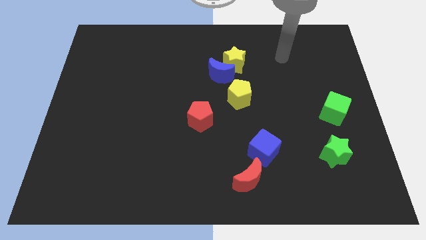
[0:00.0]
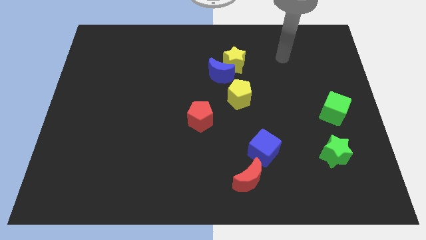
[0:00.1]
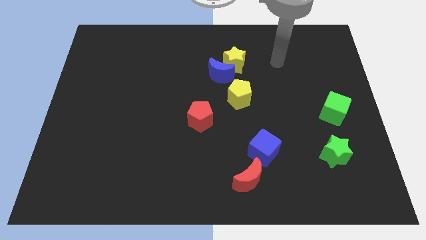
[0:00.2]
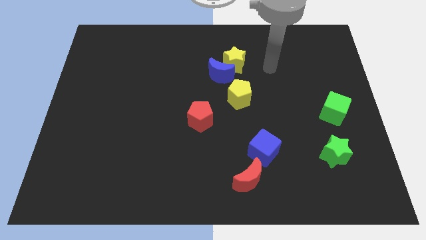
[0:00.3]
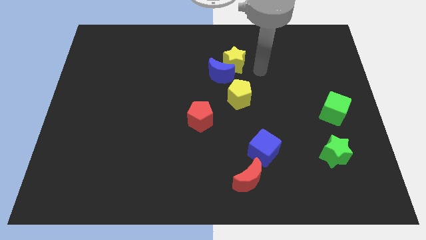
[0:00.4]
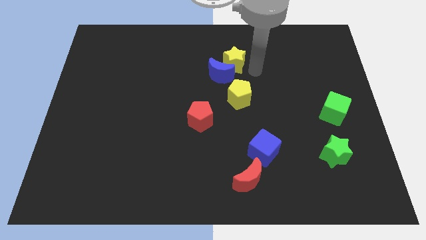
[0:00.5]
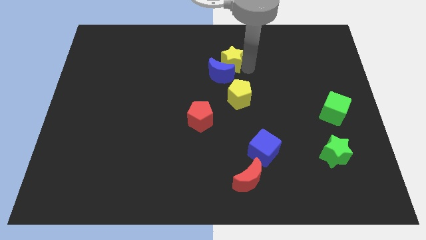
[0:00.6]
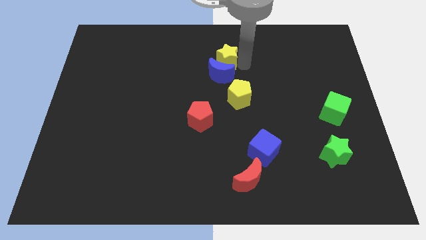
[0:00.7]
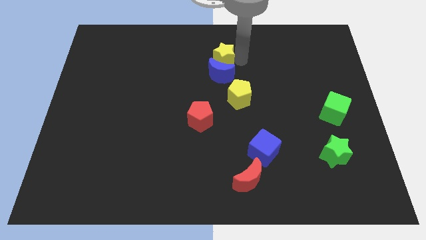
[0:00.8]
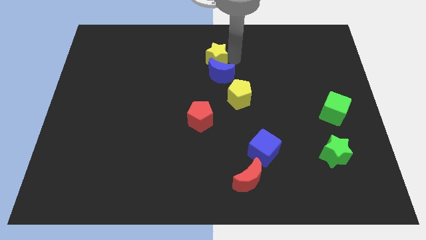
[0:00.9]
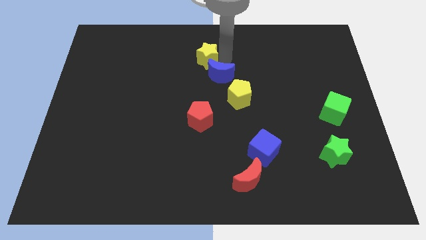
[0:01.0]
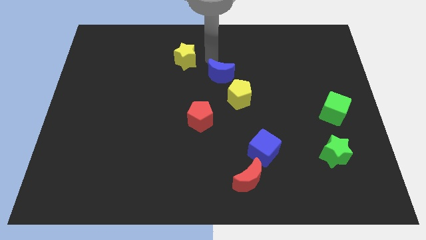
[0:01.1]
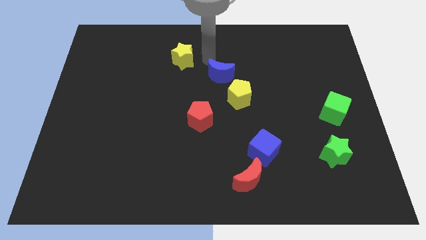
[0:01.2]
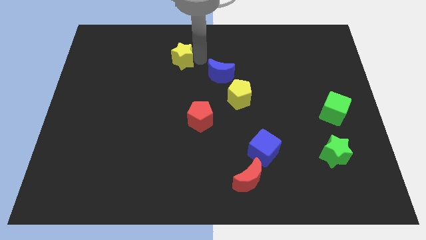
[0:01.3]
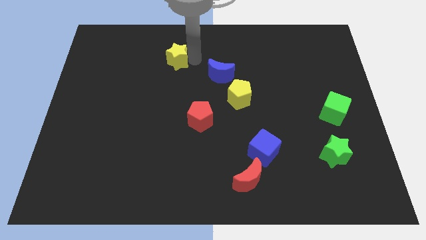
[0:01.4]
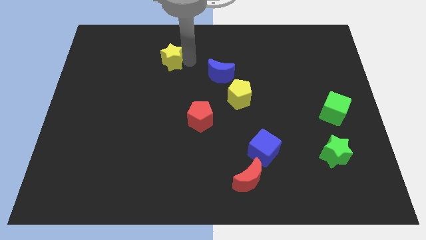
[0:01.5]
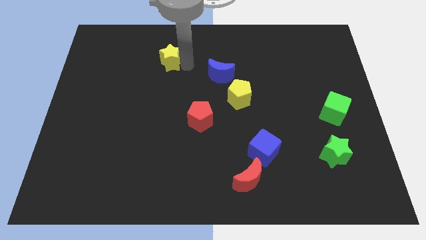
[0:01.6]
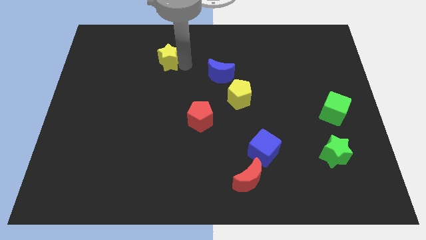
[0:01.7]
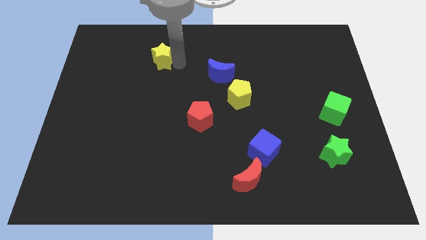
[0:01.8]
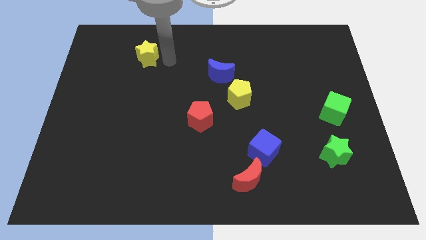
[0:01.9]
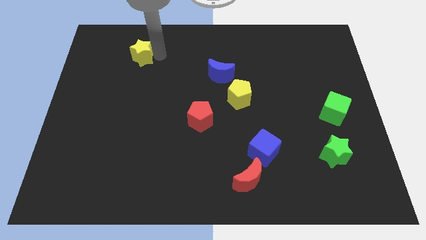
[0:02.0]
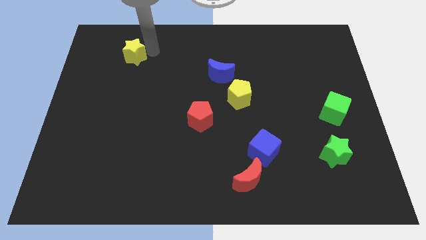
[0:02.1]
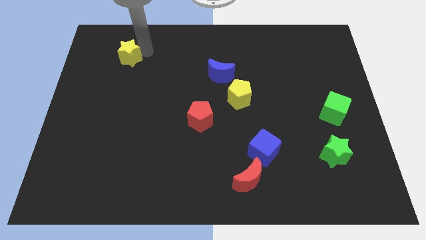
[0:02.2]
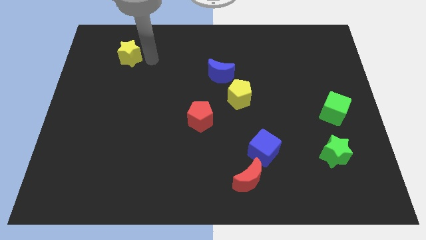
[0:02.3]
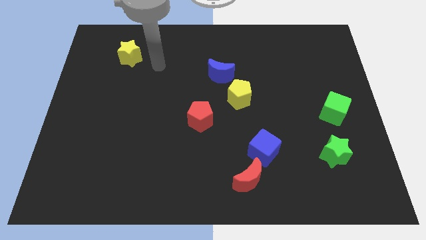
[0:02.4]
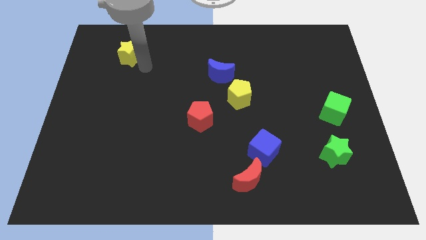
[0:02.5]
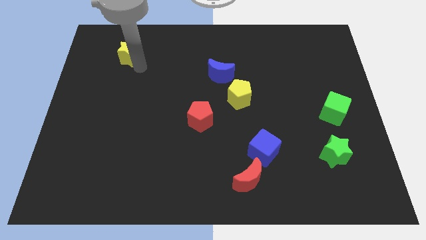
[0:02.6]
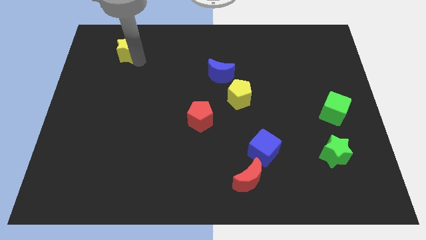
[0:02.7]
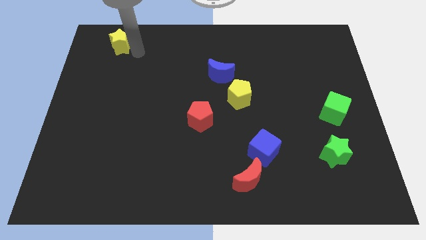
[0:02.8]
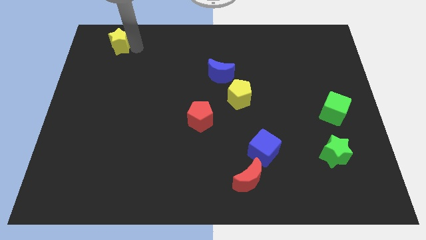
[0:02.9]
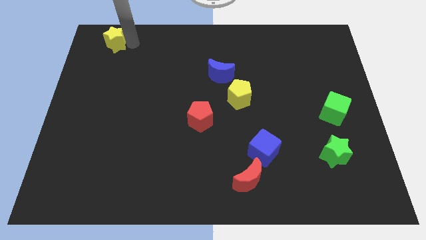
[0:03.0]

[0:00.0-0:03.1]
separate yellow star from blue moon

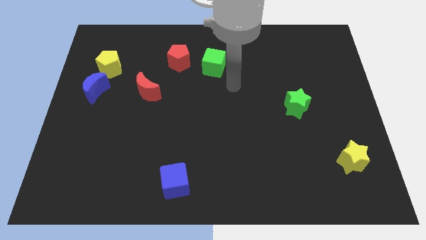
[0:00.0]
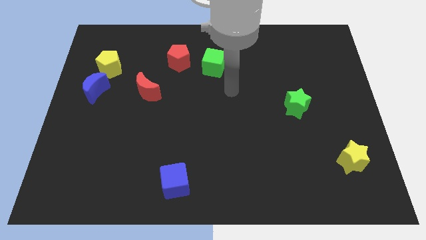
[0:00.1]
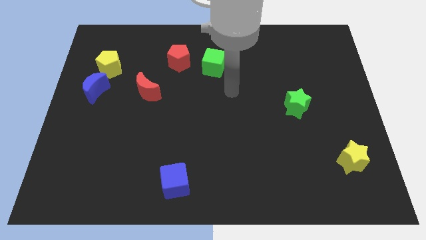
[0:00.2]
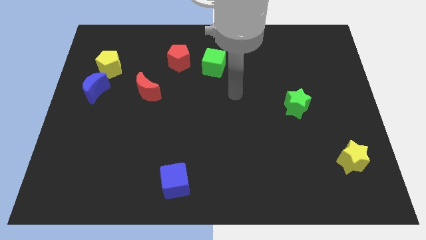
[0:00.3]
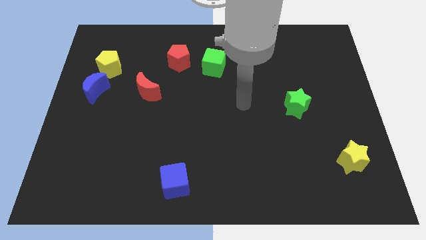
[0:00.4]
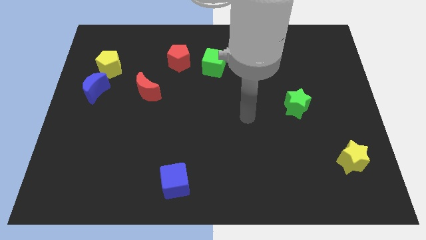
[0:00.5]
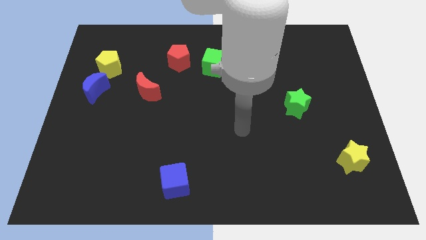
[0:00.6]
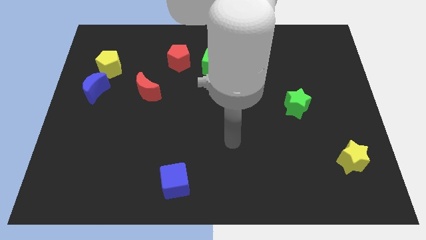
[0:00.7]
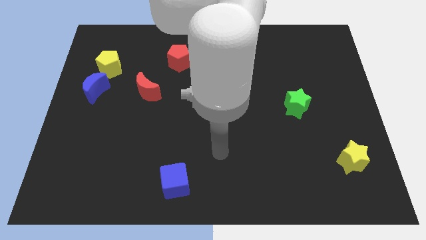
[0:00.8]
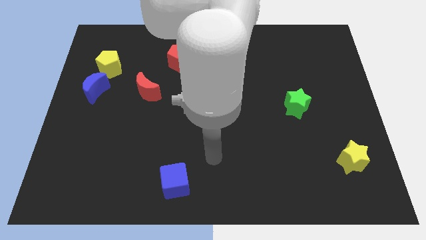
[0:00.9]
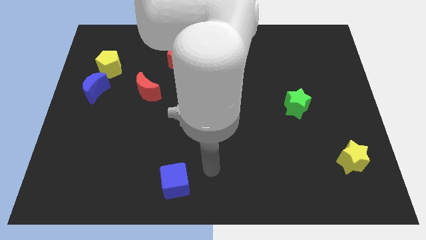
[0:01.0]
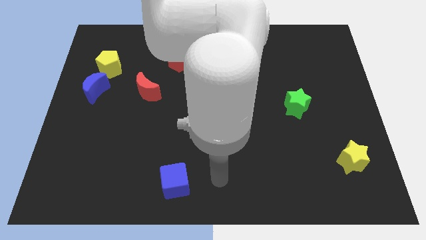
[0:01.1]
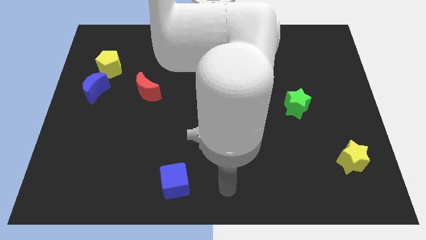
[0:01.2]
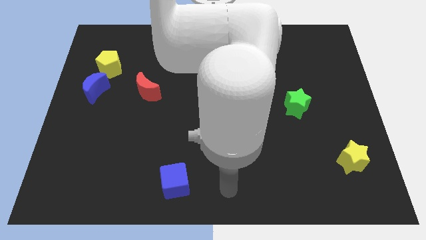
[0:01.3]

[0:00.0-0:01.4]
move your arm to the bottom center of the board

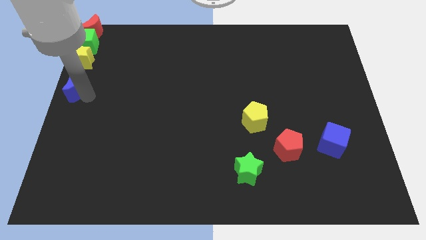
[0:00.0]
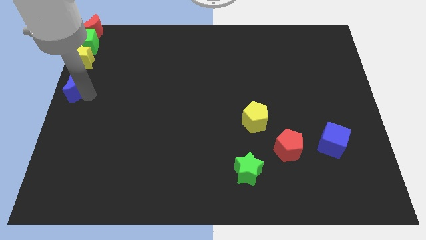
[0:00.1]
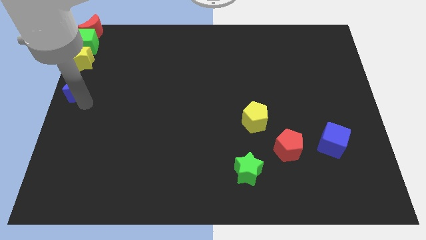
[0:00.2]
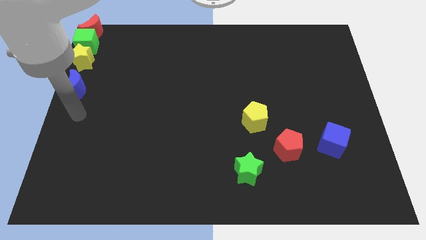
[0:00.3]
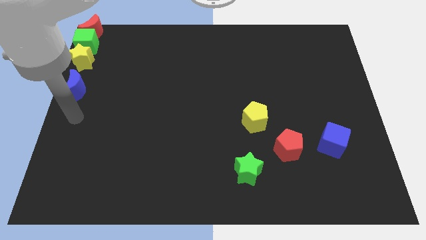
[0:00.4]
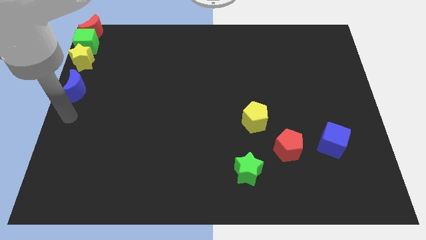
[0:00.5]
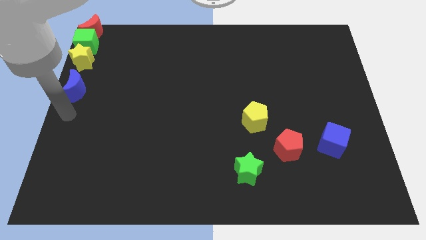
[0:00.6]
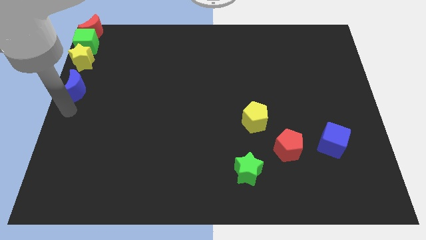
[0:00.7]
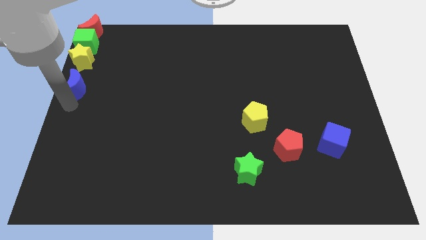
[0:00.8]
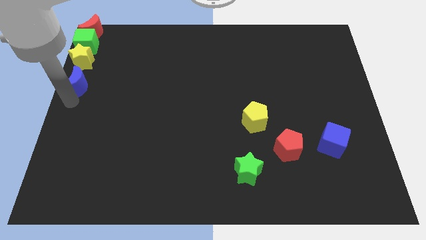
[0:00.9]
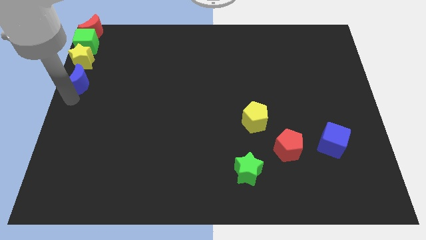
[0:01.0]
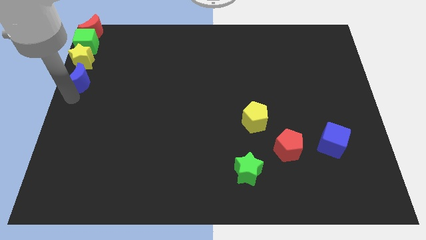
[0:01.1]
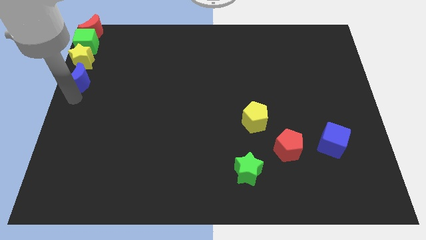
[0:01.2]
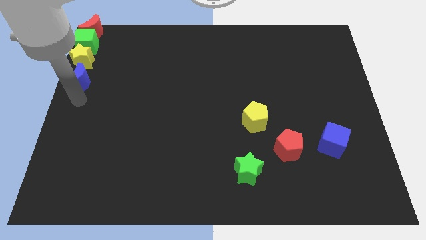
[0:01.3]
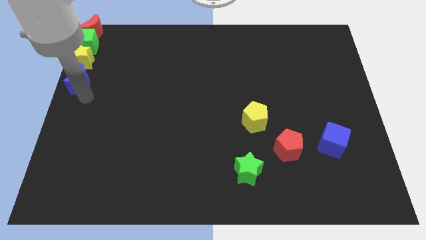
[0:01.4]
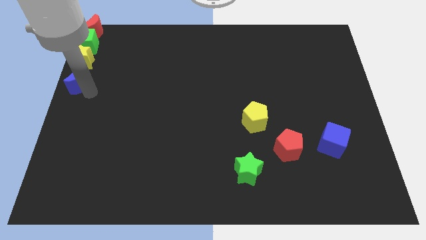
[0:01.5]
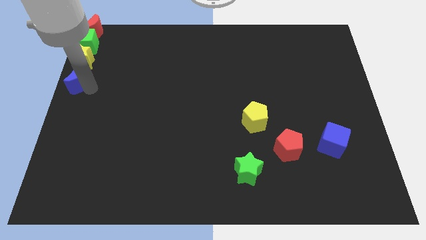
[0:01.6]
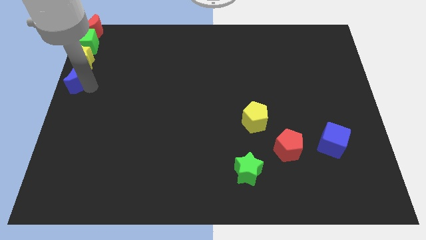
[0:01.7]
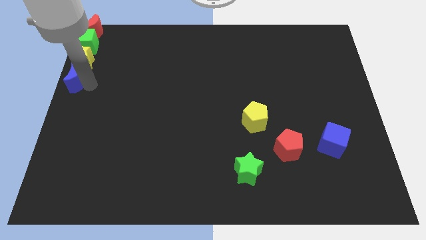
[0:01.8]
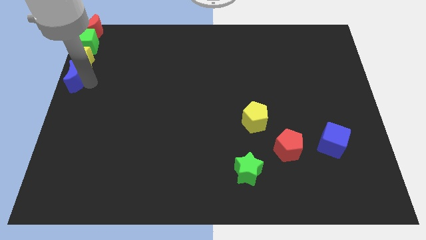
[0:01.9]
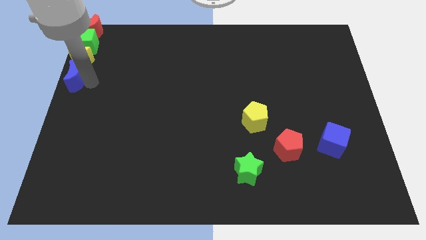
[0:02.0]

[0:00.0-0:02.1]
put the blue crescent at the bottom side of the yellow star

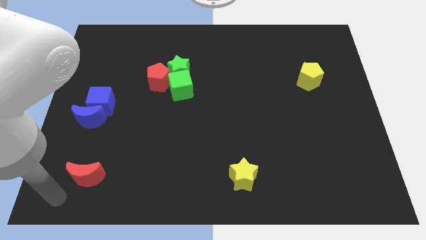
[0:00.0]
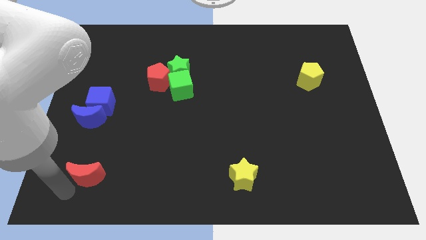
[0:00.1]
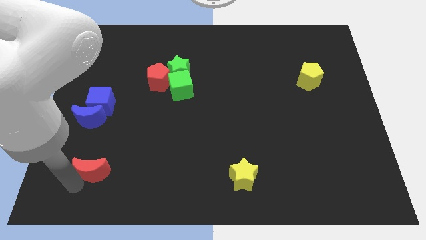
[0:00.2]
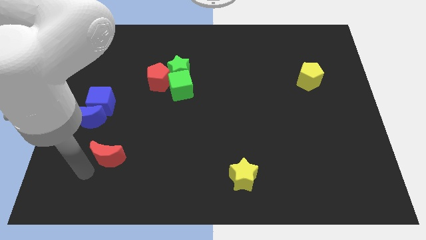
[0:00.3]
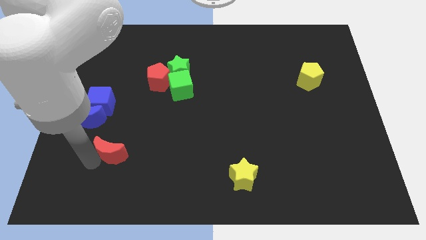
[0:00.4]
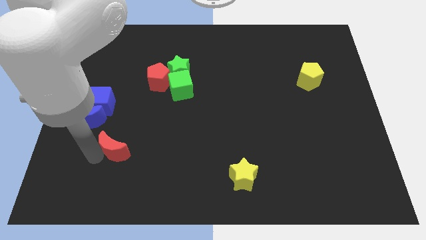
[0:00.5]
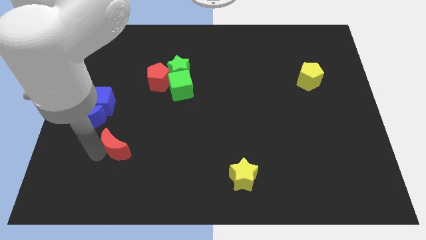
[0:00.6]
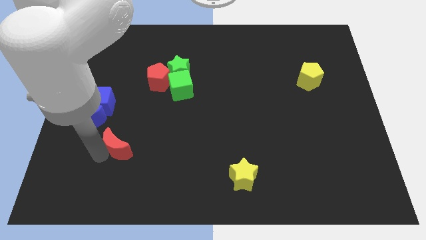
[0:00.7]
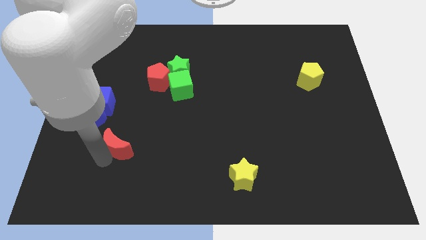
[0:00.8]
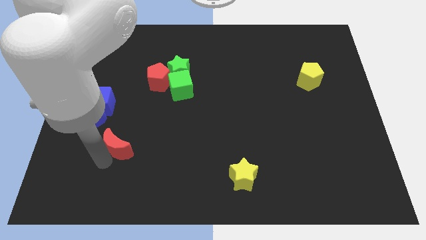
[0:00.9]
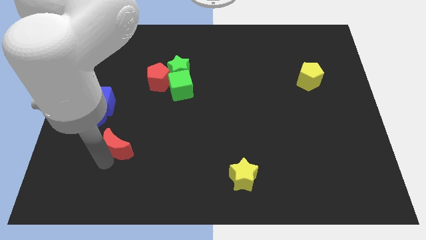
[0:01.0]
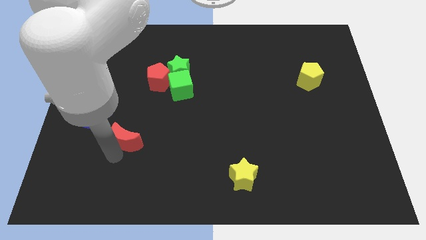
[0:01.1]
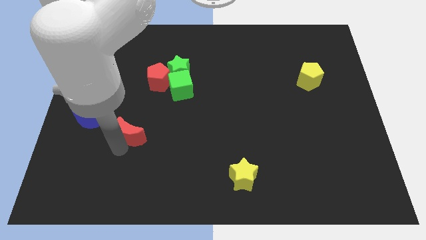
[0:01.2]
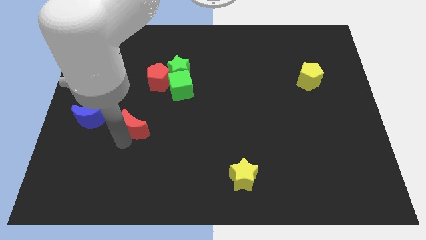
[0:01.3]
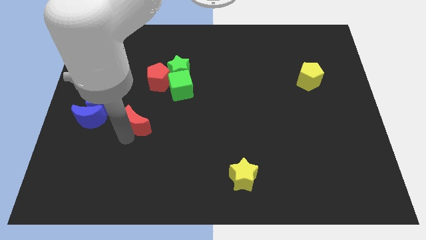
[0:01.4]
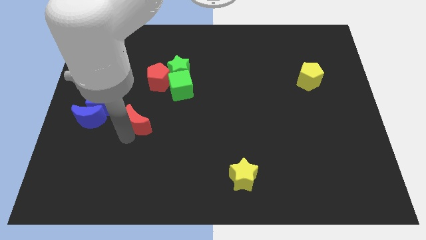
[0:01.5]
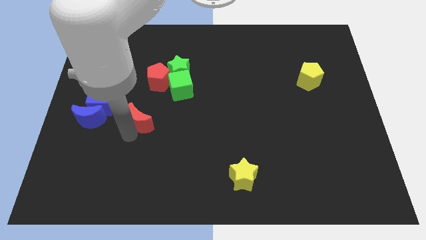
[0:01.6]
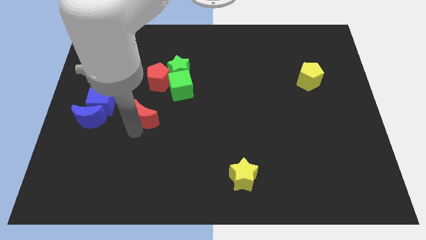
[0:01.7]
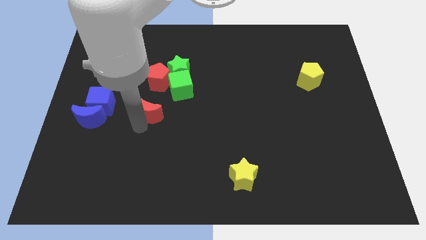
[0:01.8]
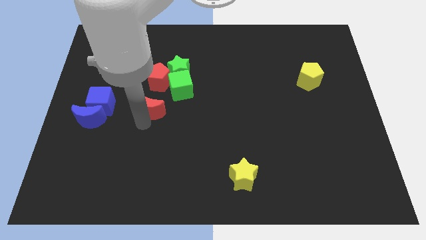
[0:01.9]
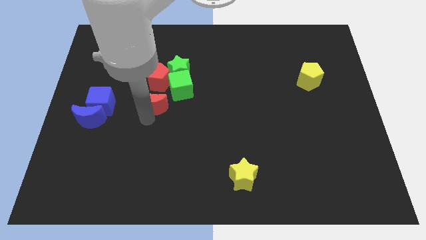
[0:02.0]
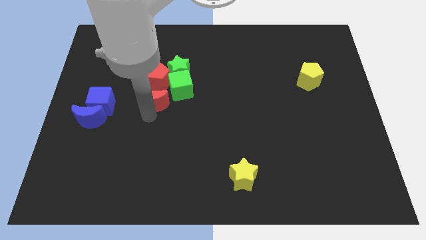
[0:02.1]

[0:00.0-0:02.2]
place the red moon below the red pentagon
